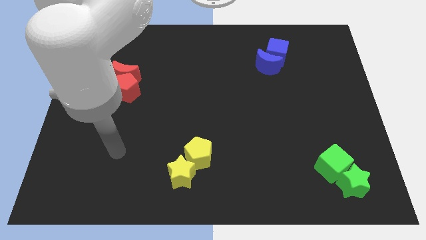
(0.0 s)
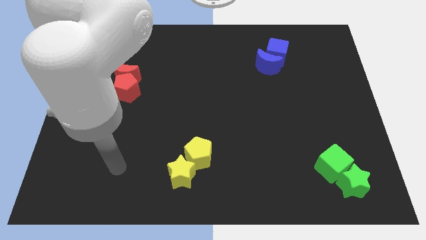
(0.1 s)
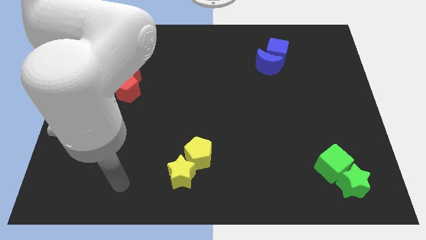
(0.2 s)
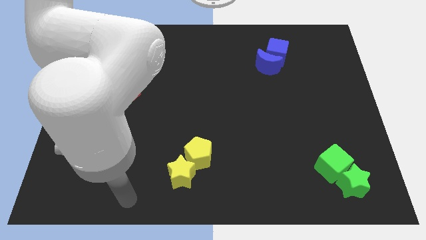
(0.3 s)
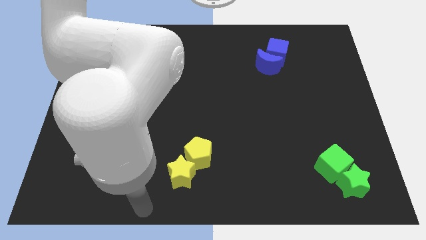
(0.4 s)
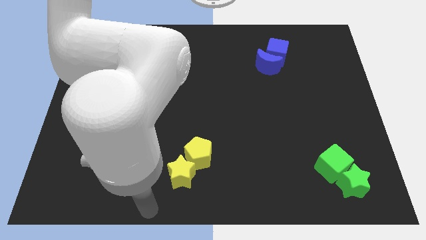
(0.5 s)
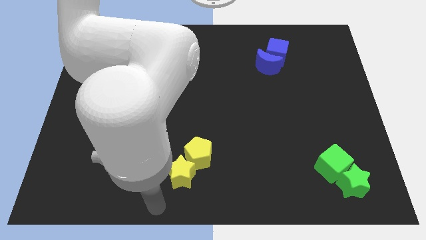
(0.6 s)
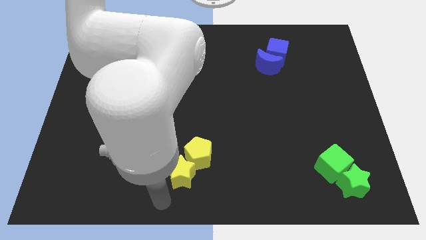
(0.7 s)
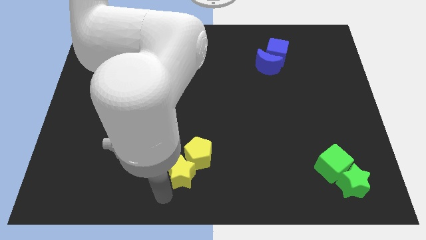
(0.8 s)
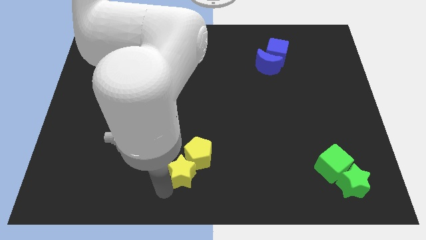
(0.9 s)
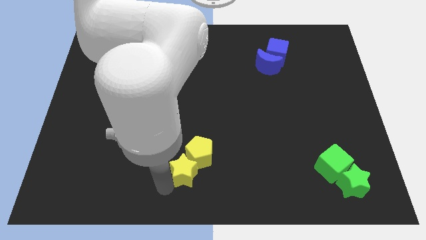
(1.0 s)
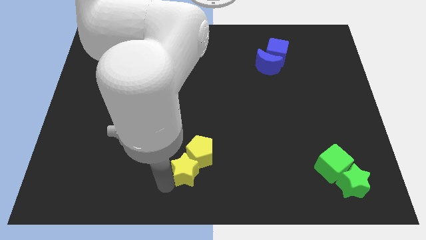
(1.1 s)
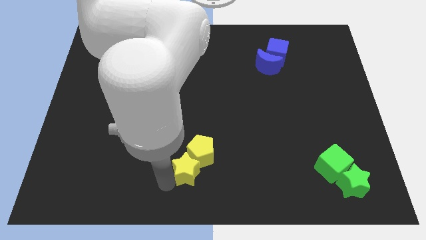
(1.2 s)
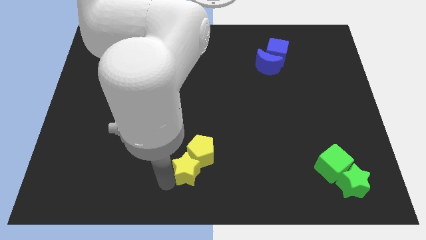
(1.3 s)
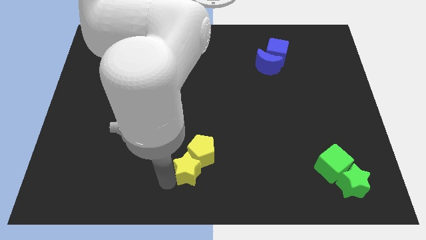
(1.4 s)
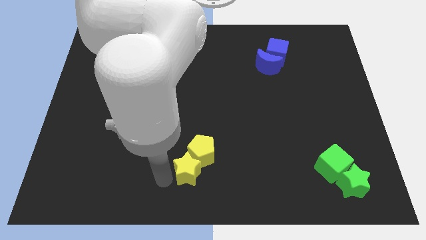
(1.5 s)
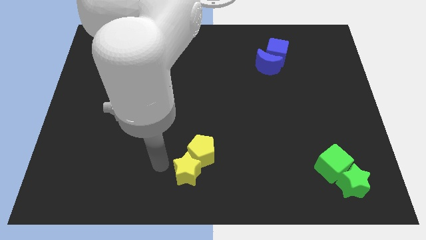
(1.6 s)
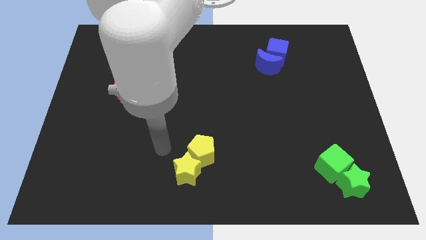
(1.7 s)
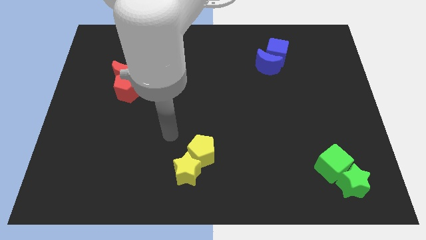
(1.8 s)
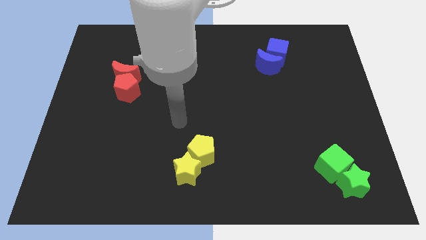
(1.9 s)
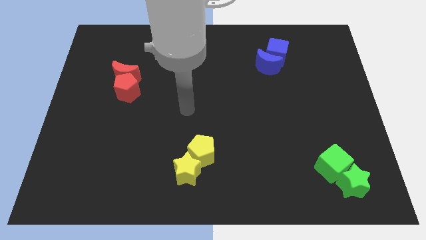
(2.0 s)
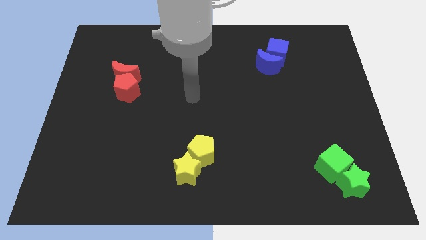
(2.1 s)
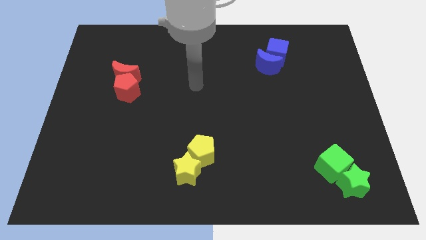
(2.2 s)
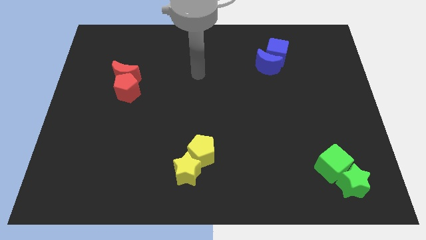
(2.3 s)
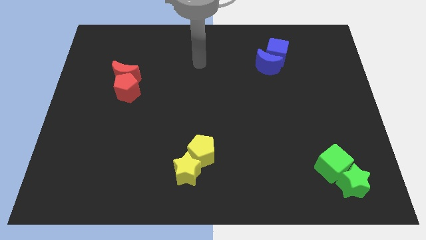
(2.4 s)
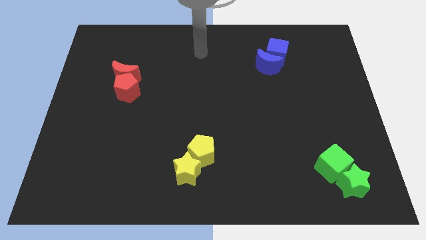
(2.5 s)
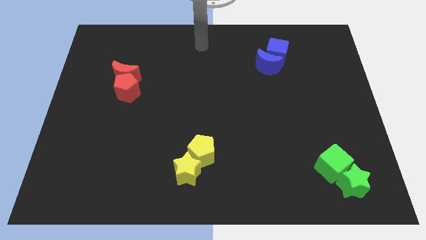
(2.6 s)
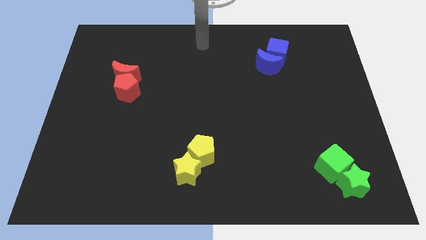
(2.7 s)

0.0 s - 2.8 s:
slightly move the group of yellow blocks to the top

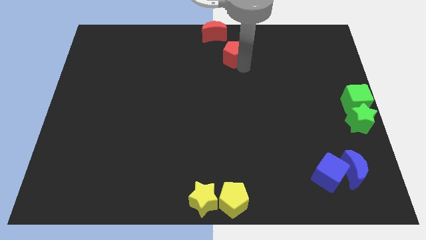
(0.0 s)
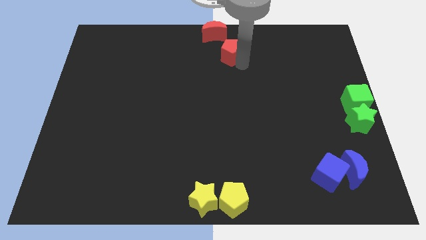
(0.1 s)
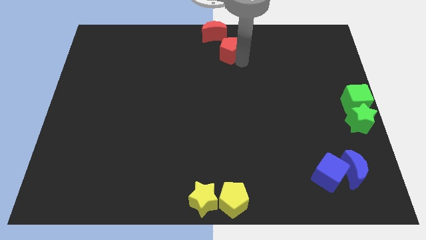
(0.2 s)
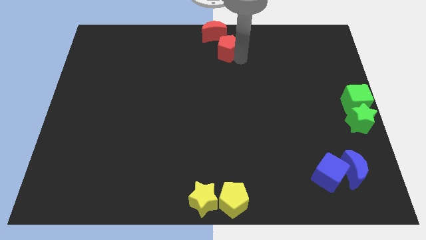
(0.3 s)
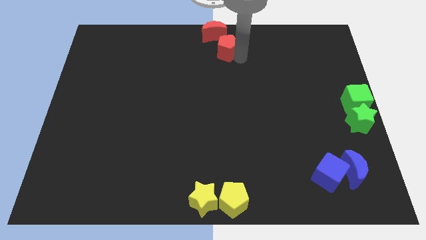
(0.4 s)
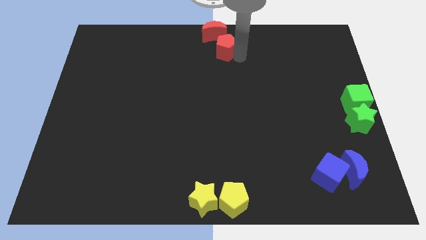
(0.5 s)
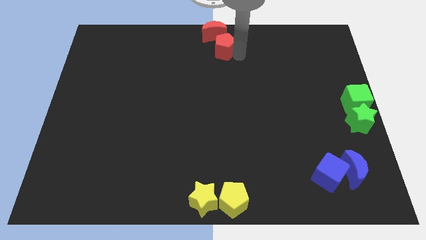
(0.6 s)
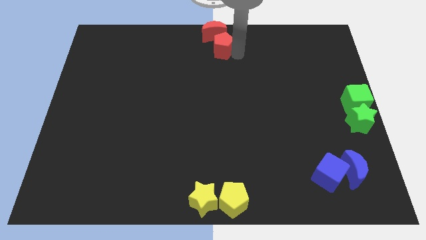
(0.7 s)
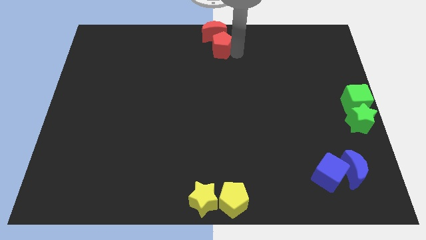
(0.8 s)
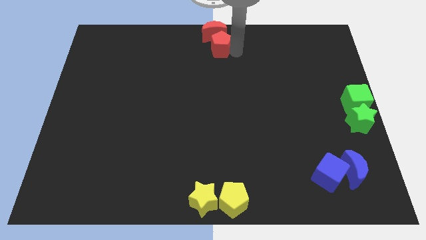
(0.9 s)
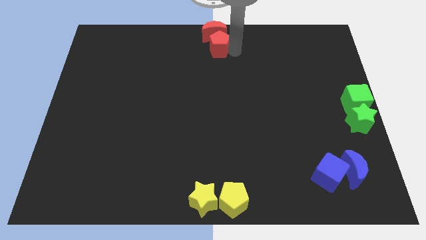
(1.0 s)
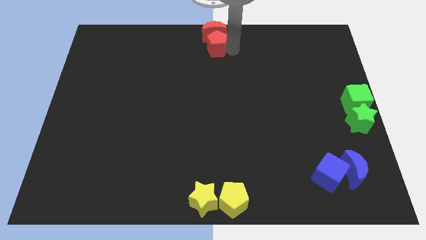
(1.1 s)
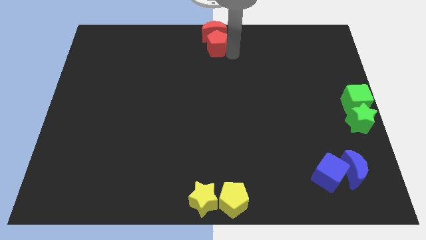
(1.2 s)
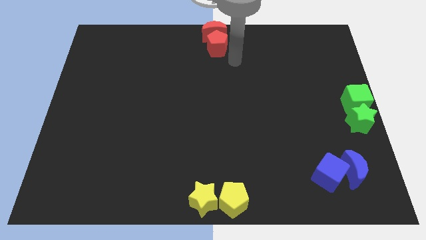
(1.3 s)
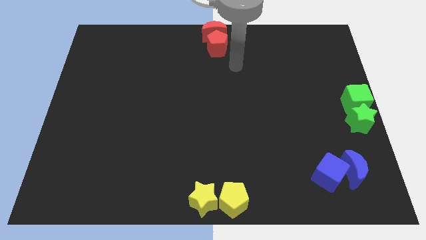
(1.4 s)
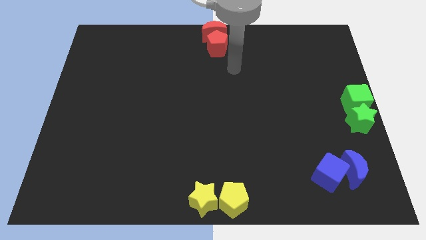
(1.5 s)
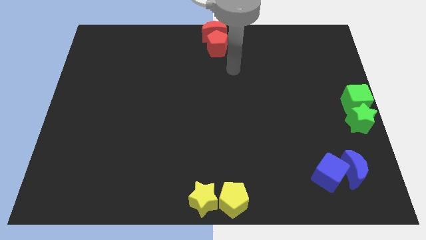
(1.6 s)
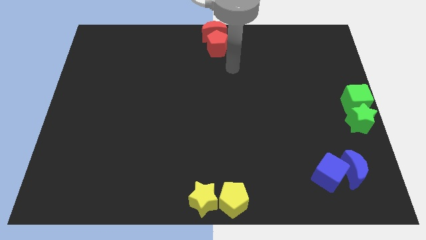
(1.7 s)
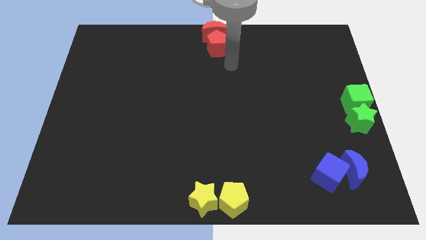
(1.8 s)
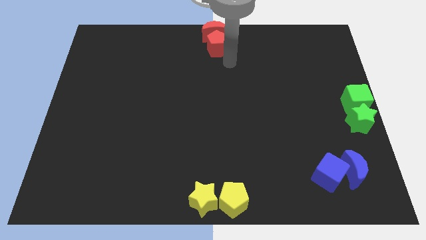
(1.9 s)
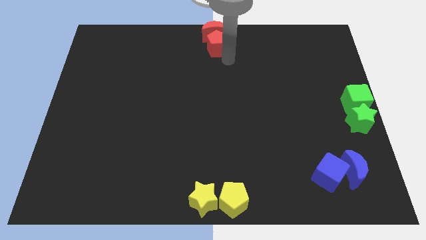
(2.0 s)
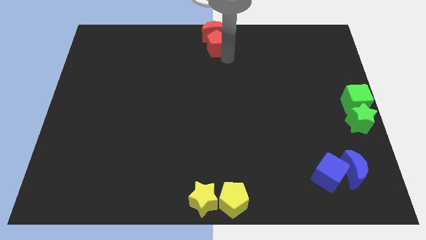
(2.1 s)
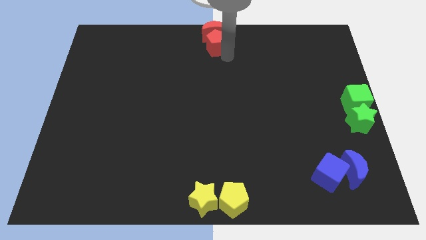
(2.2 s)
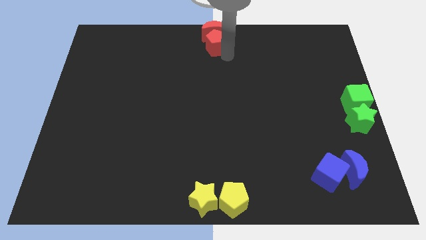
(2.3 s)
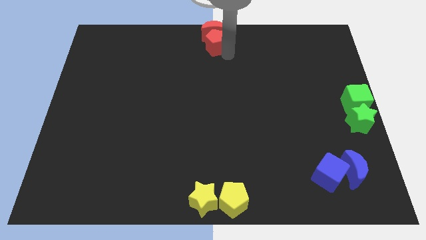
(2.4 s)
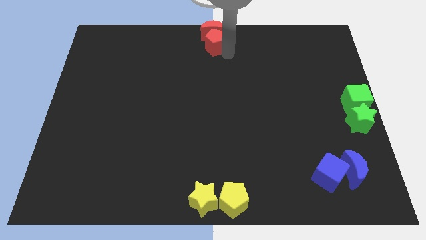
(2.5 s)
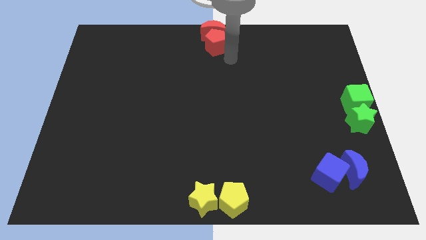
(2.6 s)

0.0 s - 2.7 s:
move the red pentagon into the red crescent

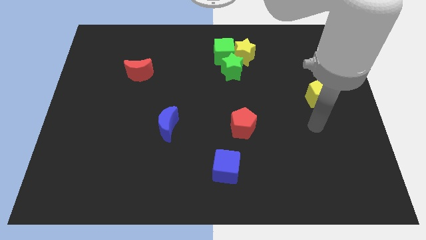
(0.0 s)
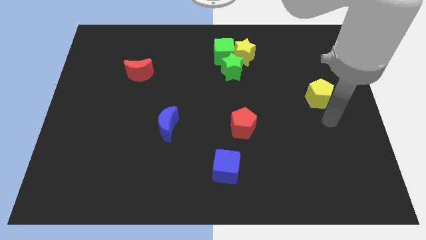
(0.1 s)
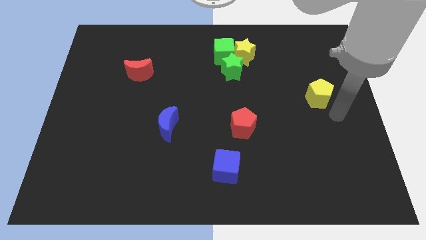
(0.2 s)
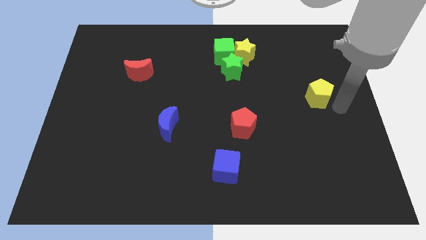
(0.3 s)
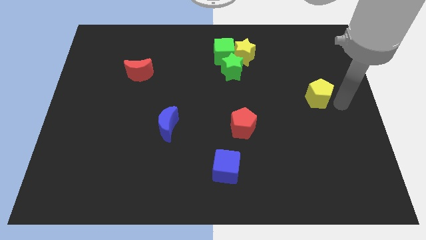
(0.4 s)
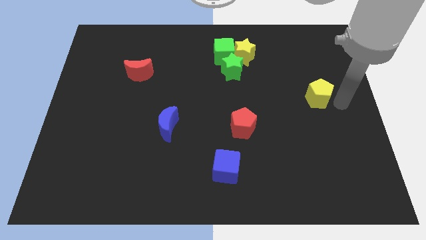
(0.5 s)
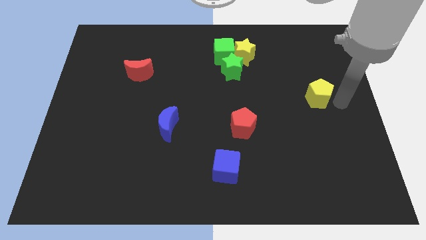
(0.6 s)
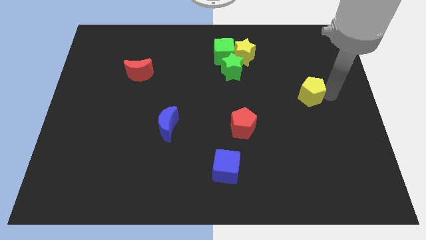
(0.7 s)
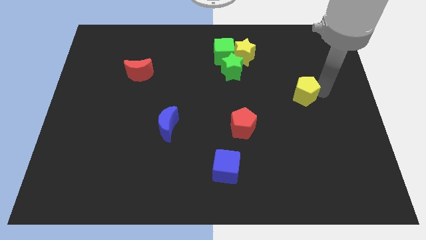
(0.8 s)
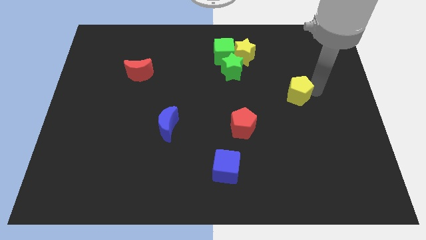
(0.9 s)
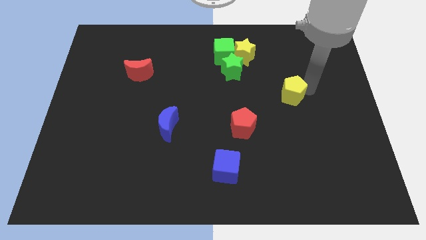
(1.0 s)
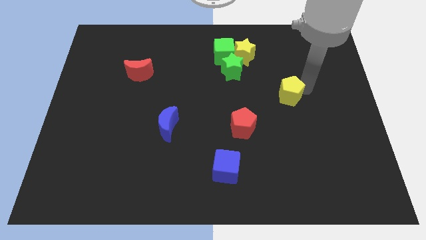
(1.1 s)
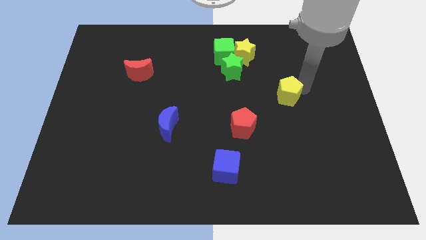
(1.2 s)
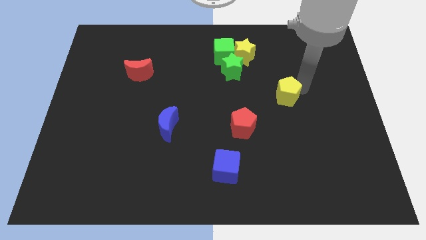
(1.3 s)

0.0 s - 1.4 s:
push the yellow pentagon slightly to the left

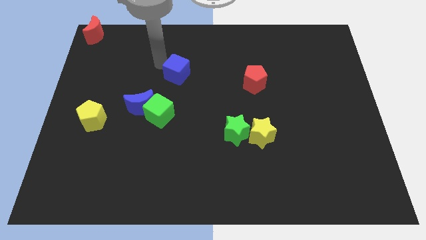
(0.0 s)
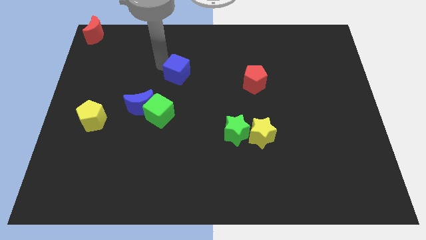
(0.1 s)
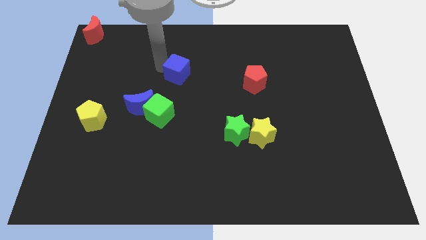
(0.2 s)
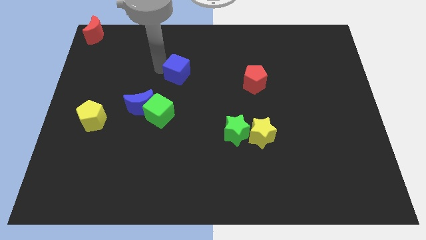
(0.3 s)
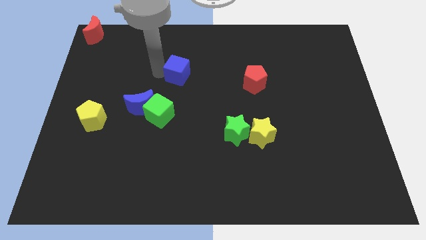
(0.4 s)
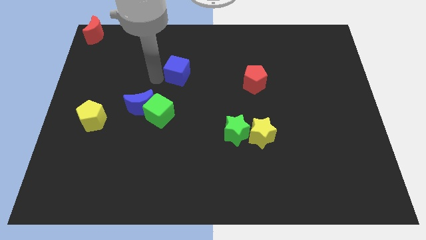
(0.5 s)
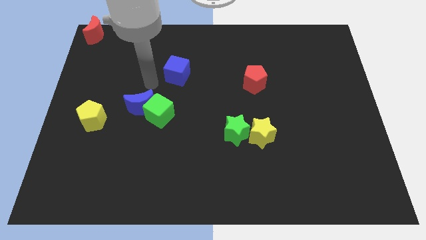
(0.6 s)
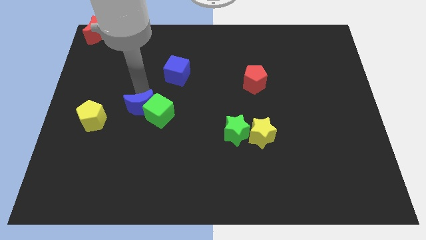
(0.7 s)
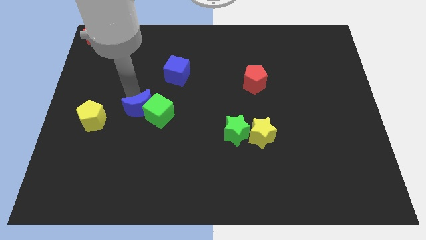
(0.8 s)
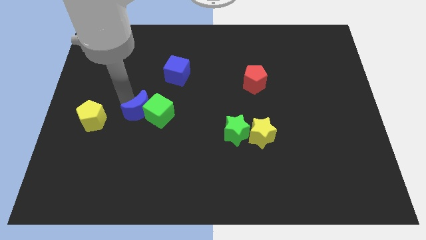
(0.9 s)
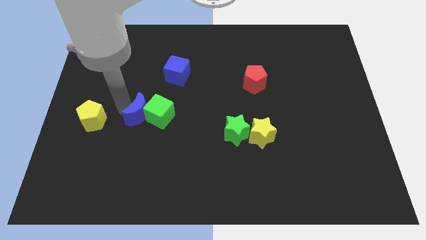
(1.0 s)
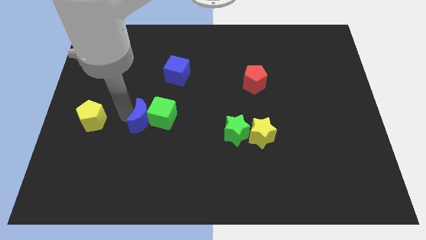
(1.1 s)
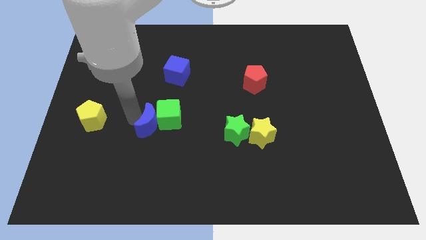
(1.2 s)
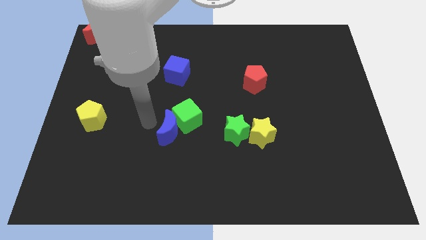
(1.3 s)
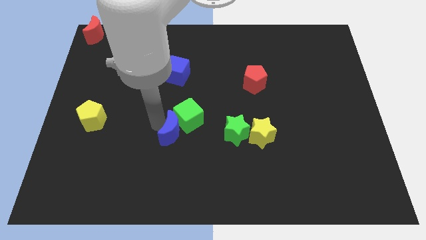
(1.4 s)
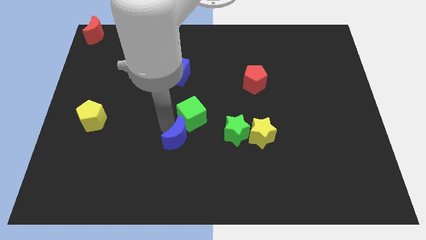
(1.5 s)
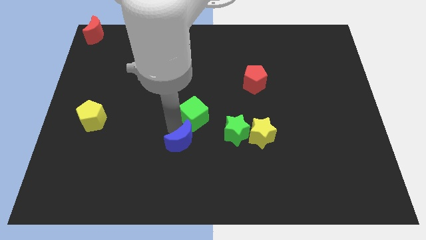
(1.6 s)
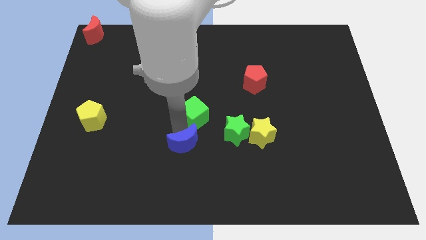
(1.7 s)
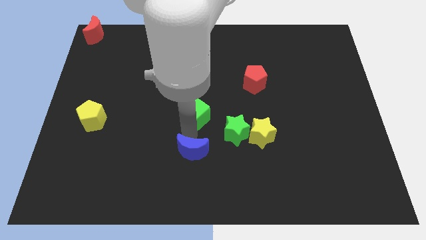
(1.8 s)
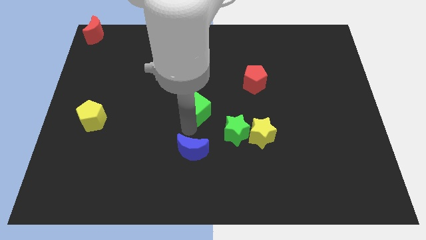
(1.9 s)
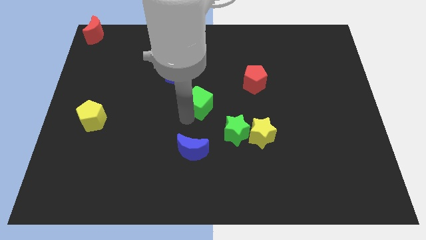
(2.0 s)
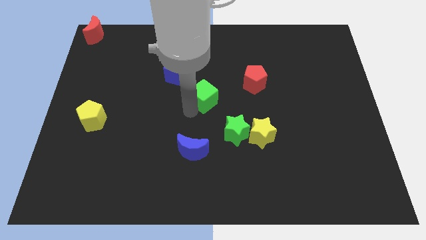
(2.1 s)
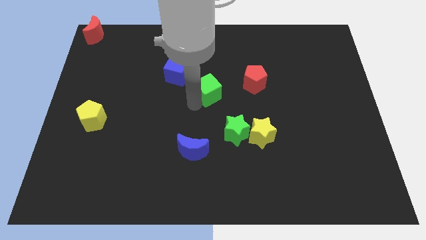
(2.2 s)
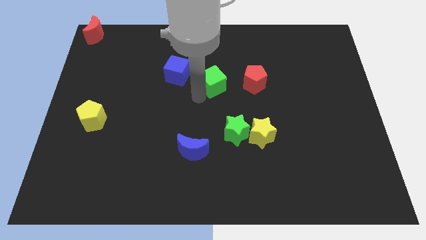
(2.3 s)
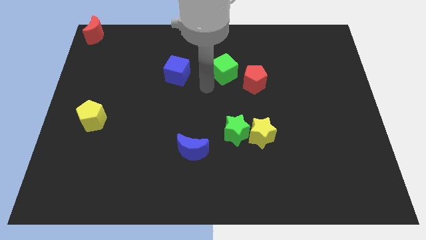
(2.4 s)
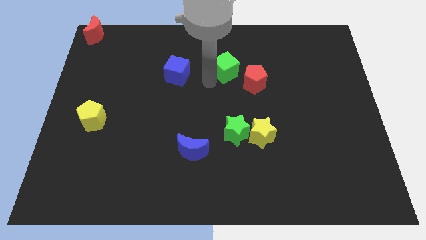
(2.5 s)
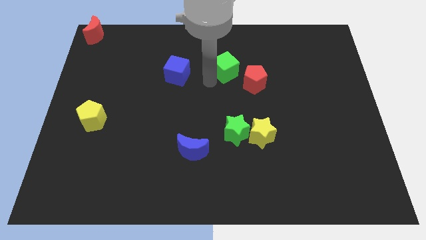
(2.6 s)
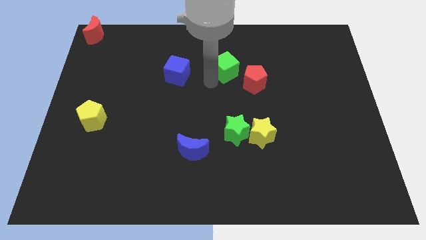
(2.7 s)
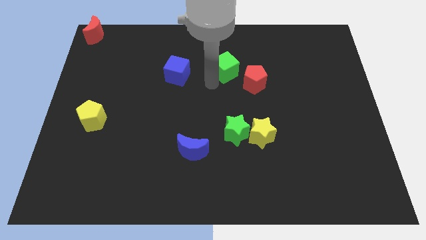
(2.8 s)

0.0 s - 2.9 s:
place the green cube in between the blue cube and the red pentagon
